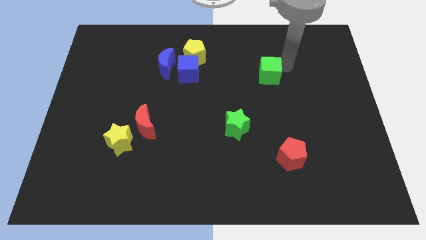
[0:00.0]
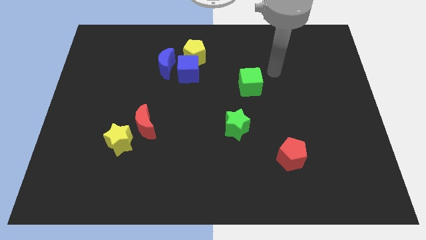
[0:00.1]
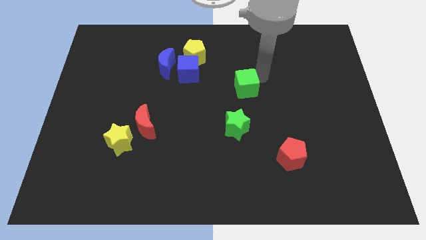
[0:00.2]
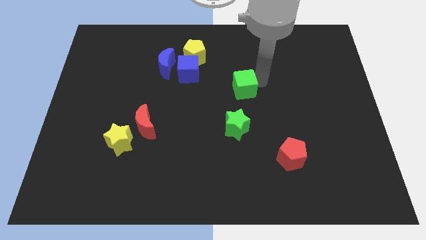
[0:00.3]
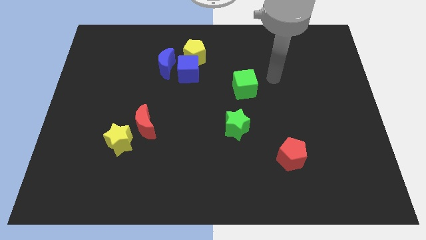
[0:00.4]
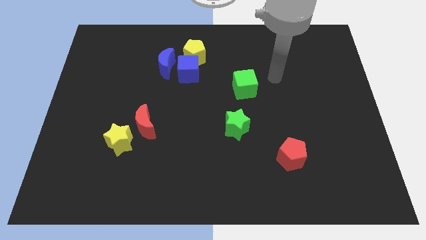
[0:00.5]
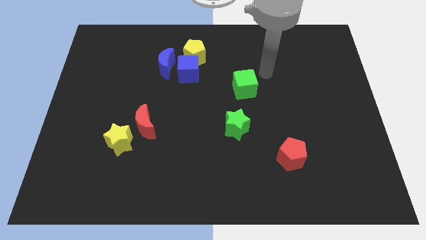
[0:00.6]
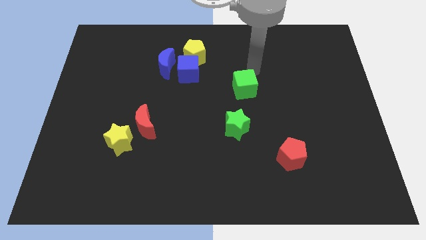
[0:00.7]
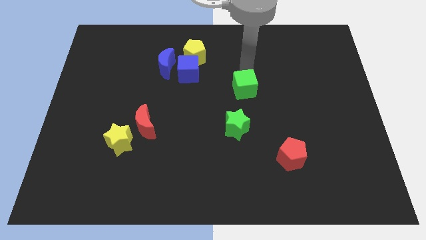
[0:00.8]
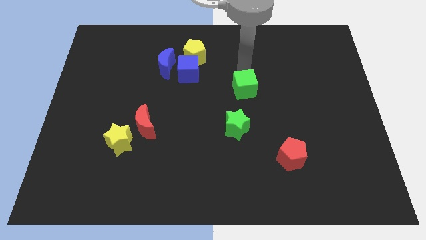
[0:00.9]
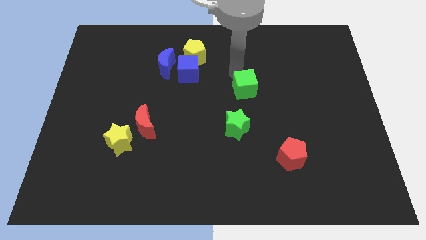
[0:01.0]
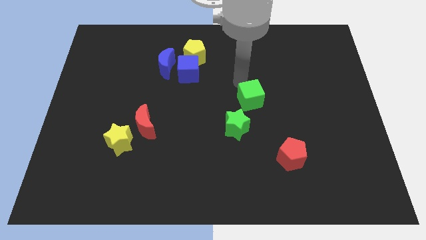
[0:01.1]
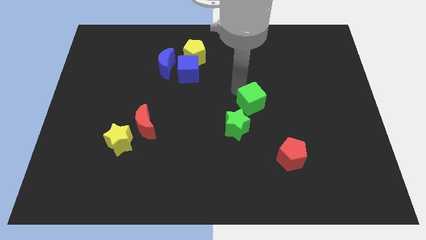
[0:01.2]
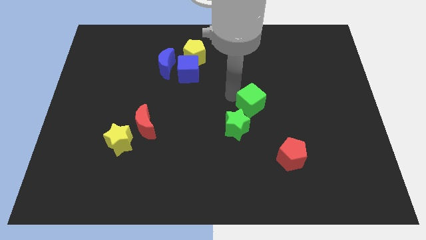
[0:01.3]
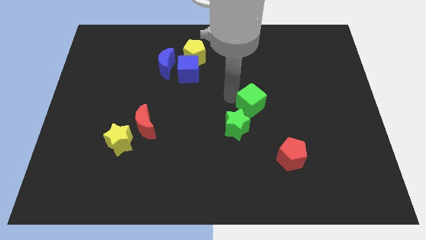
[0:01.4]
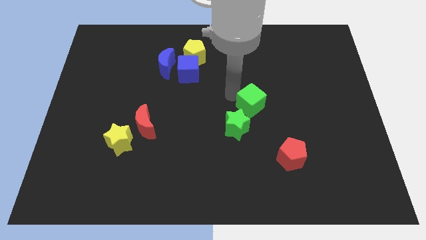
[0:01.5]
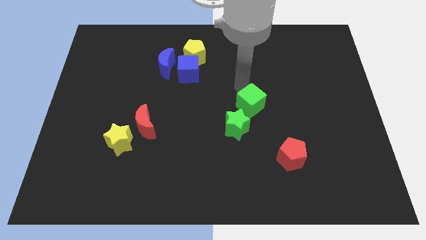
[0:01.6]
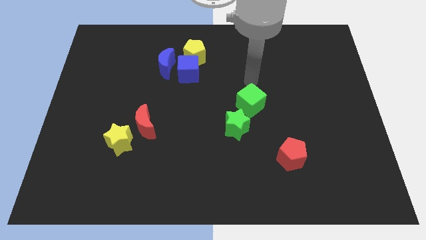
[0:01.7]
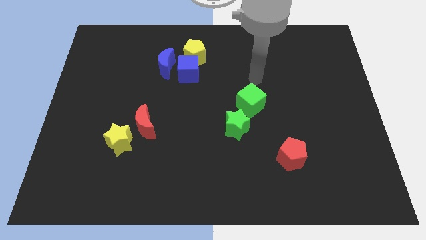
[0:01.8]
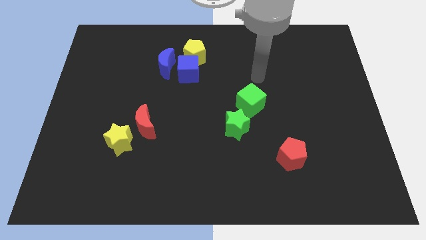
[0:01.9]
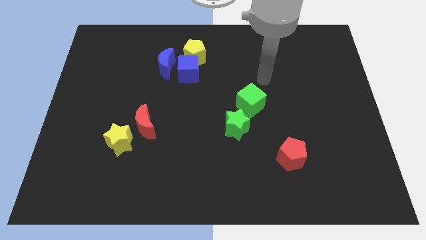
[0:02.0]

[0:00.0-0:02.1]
push green cube towards green star

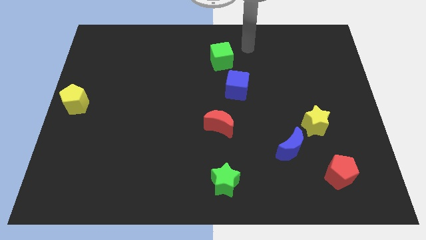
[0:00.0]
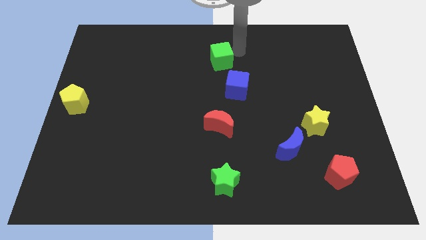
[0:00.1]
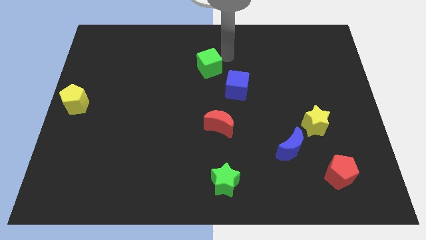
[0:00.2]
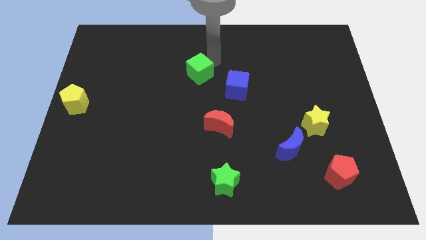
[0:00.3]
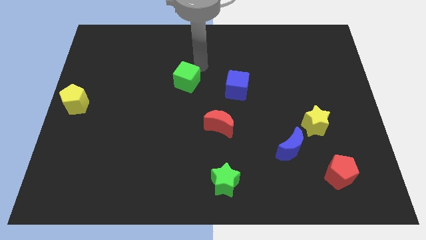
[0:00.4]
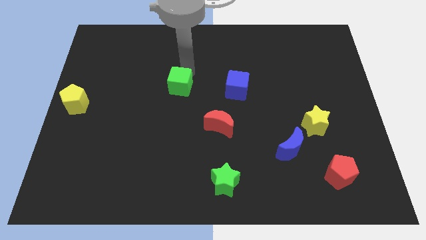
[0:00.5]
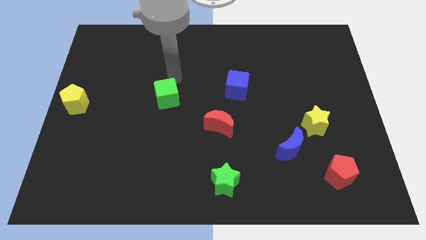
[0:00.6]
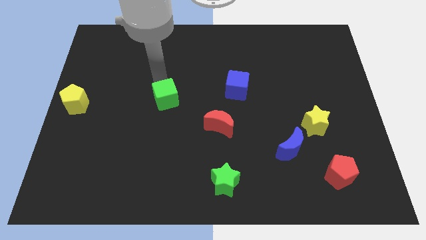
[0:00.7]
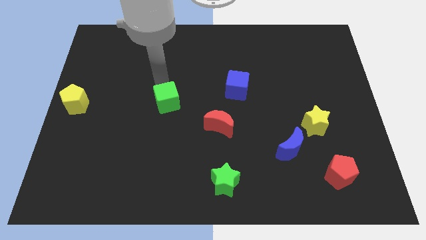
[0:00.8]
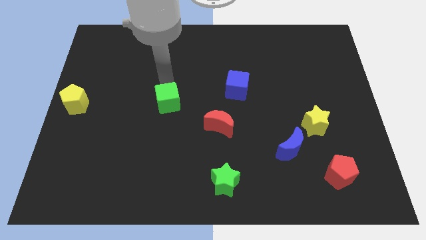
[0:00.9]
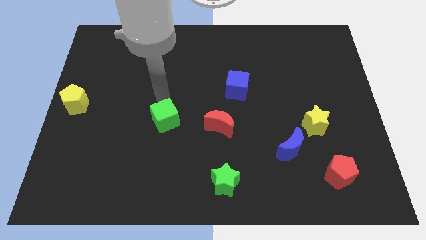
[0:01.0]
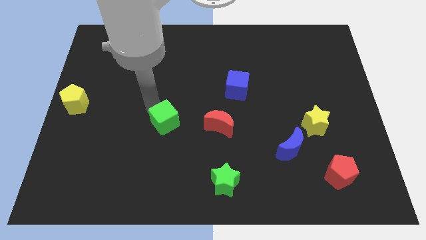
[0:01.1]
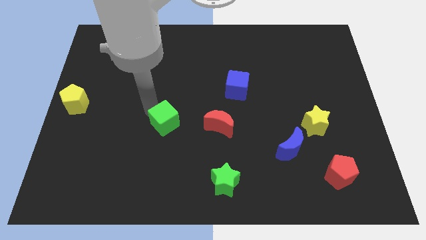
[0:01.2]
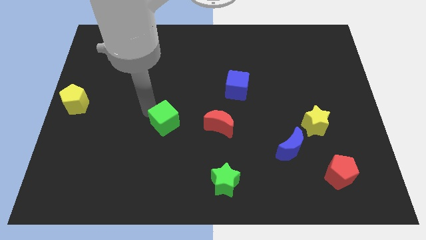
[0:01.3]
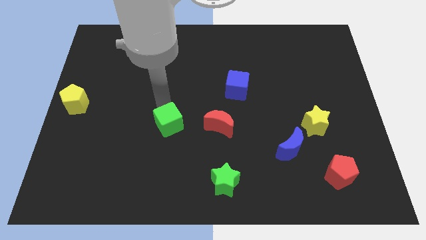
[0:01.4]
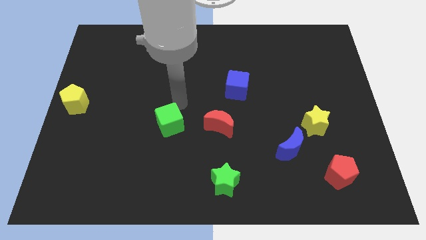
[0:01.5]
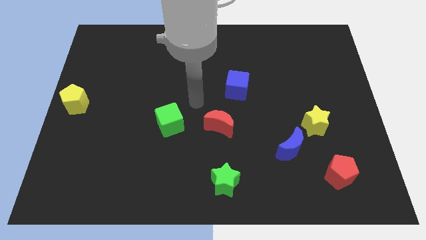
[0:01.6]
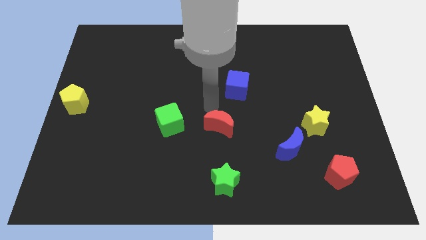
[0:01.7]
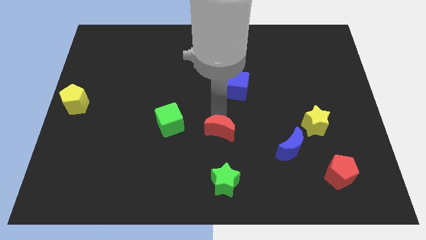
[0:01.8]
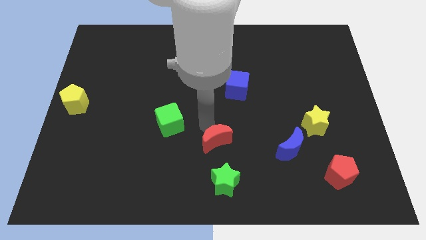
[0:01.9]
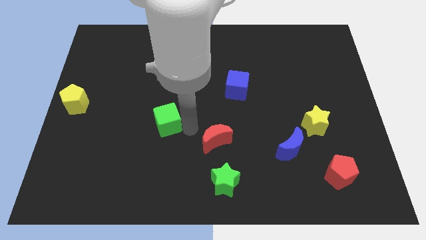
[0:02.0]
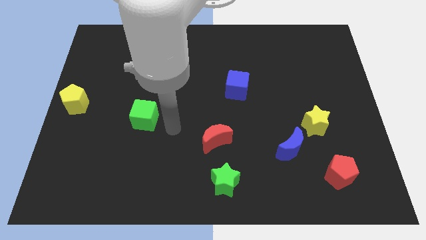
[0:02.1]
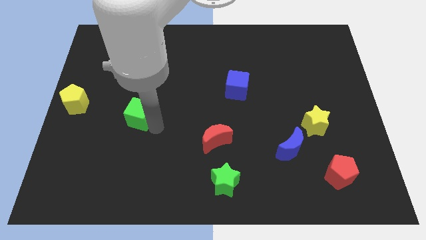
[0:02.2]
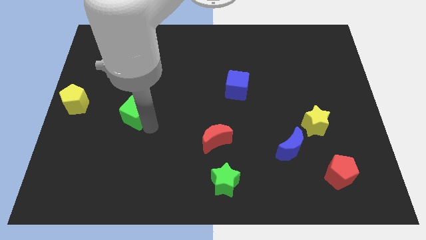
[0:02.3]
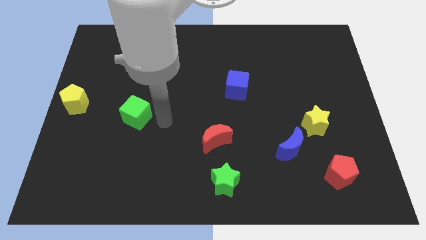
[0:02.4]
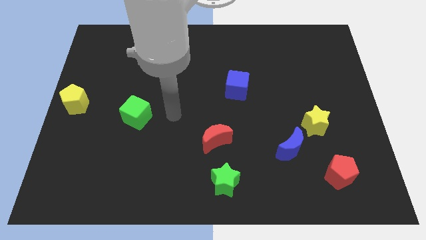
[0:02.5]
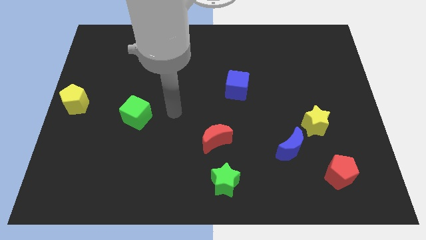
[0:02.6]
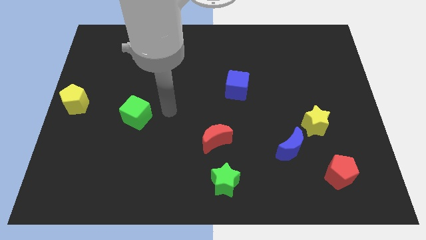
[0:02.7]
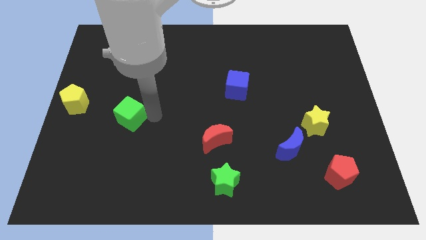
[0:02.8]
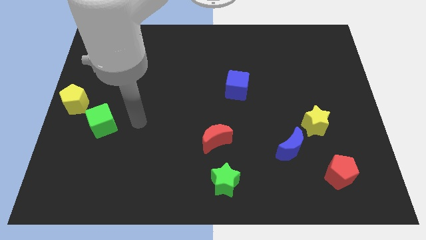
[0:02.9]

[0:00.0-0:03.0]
place green cube bottom right to yellow pentagon

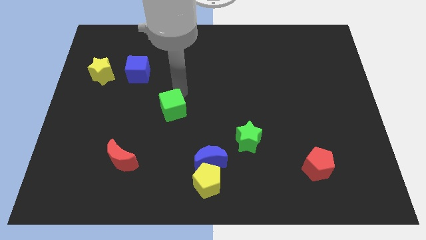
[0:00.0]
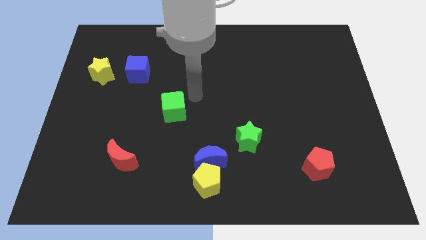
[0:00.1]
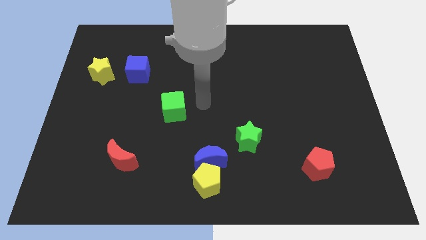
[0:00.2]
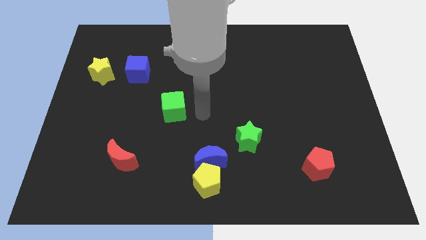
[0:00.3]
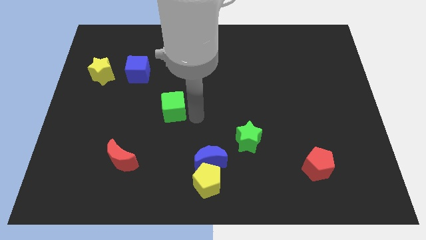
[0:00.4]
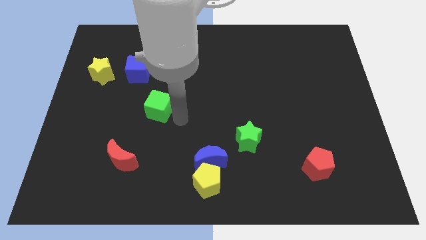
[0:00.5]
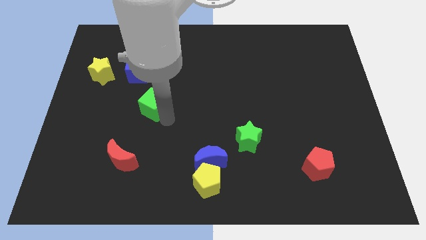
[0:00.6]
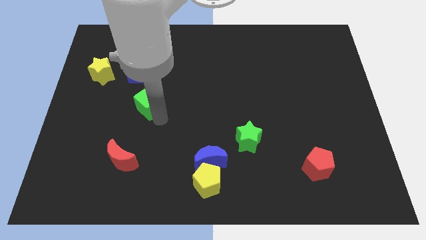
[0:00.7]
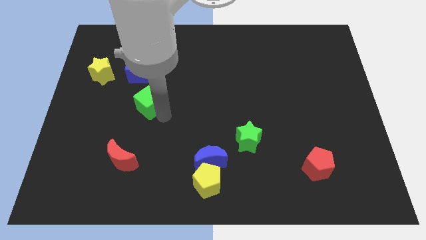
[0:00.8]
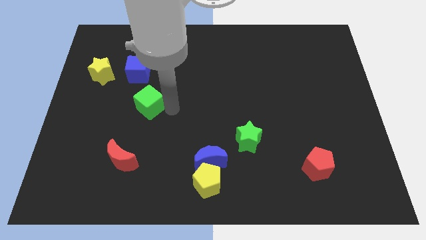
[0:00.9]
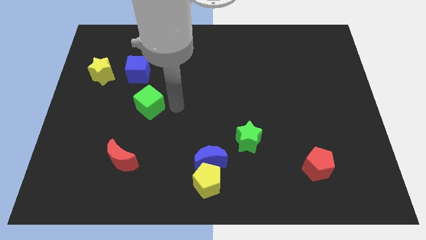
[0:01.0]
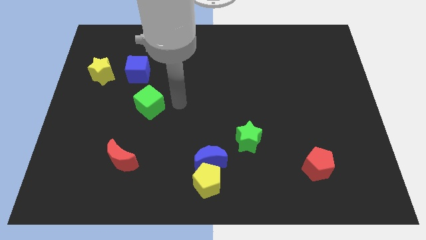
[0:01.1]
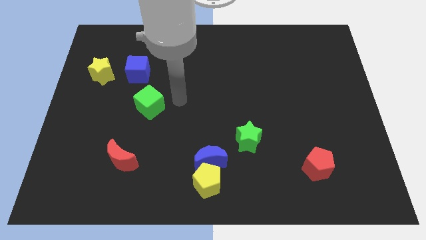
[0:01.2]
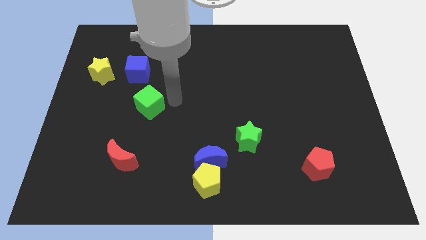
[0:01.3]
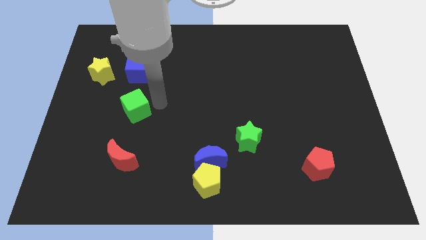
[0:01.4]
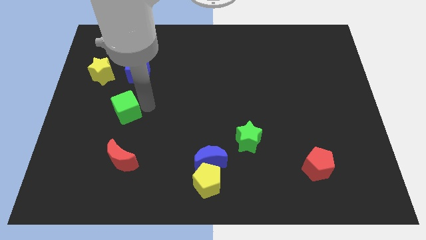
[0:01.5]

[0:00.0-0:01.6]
move the green cube to the bottom of the blue cube

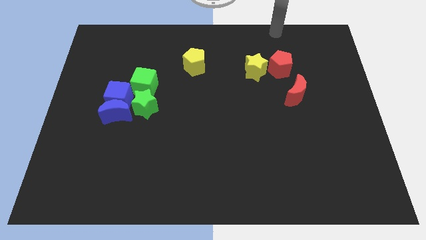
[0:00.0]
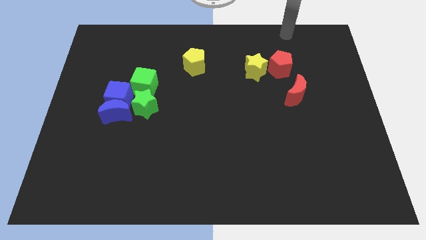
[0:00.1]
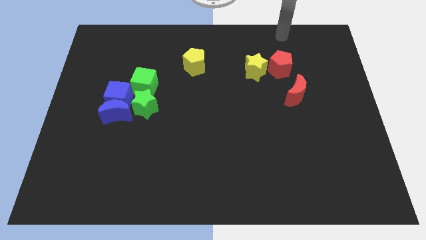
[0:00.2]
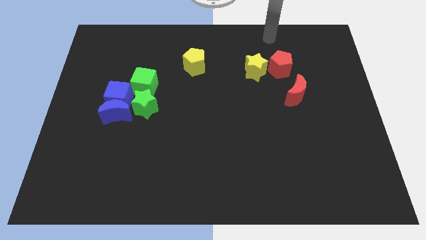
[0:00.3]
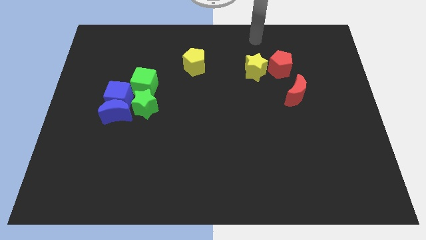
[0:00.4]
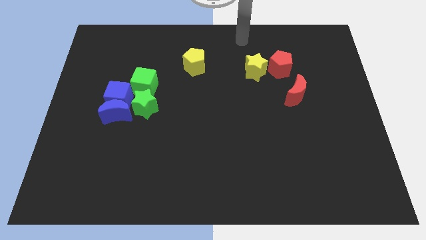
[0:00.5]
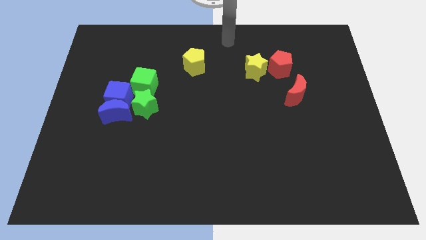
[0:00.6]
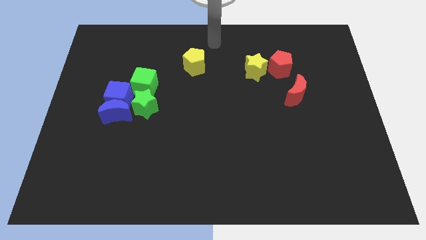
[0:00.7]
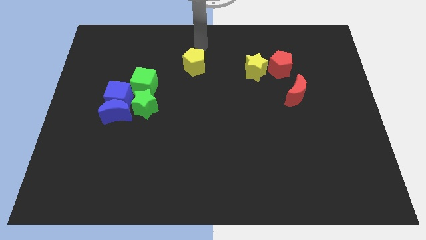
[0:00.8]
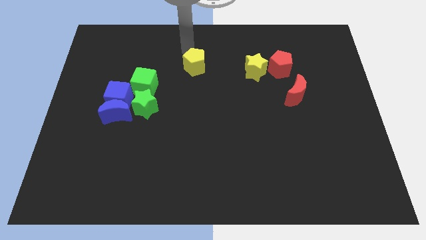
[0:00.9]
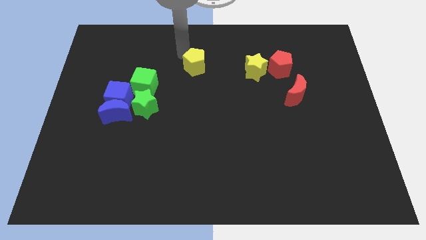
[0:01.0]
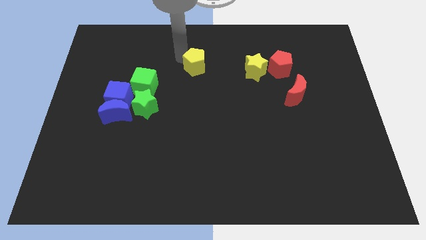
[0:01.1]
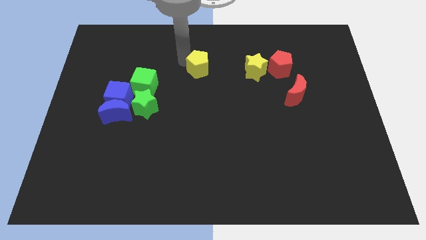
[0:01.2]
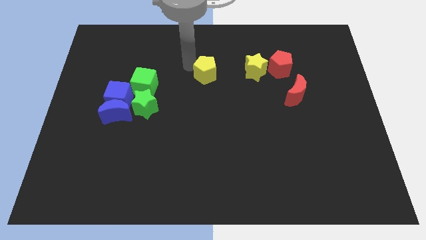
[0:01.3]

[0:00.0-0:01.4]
move the yellow pentagon left horizontal to the yellow star

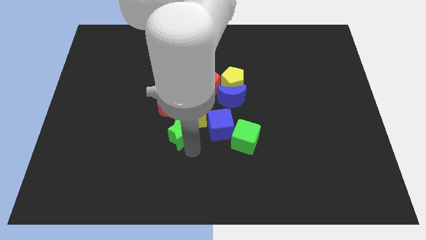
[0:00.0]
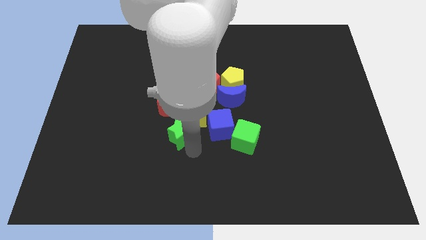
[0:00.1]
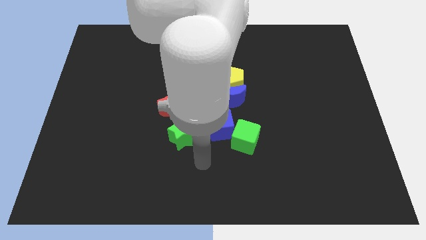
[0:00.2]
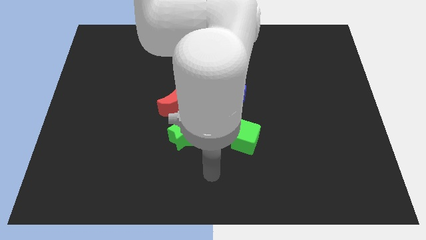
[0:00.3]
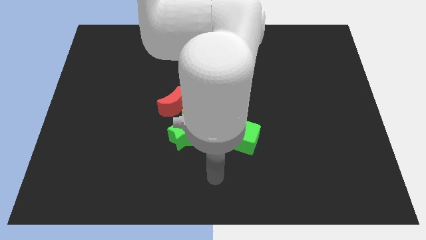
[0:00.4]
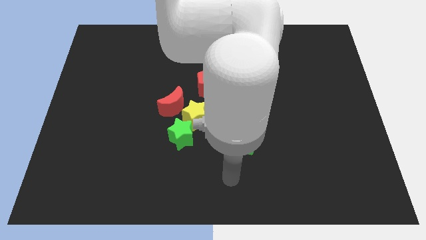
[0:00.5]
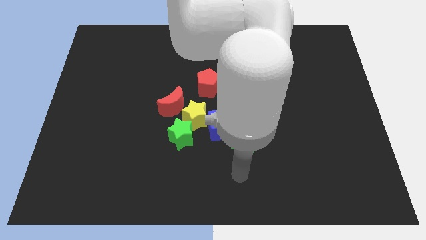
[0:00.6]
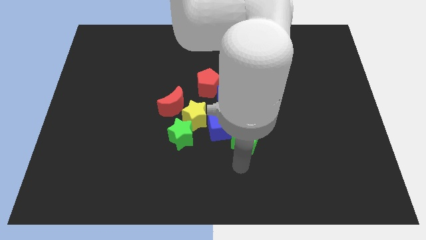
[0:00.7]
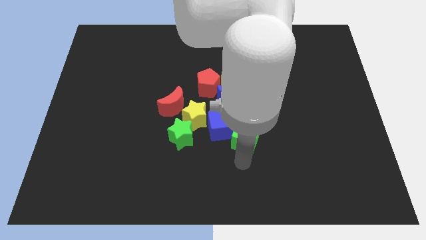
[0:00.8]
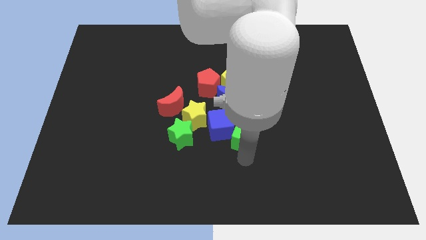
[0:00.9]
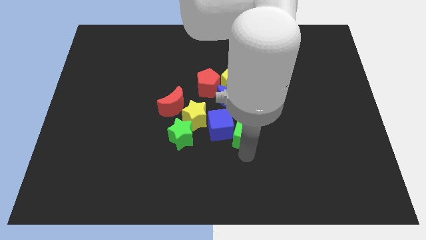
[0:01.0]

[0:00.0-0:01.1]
slide your arm below the green cube
